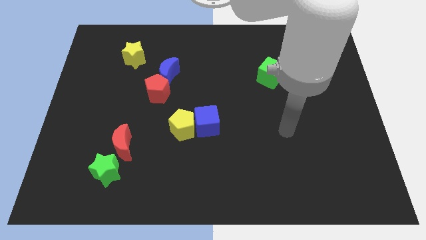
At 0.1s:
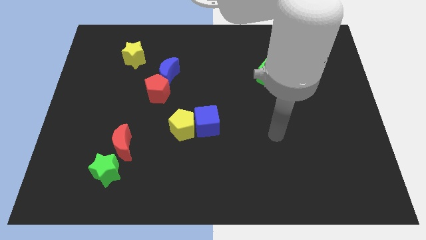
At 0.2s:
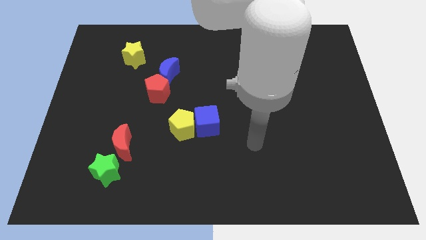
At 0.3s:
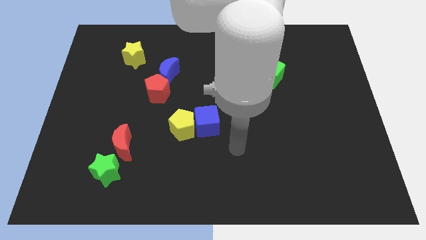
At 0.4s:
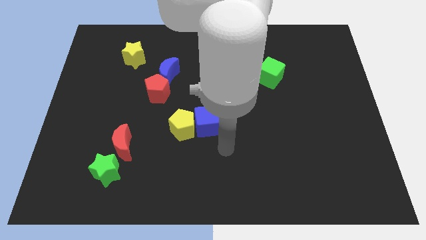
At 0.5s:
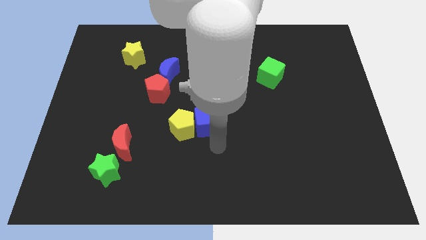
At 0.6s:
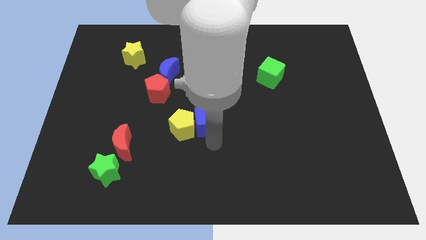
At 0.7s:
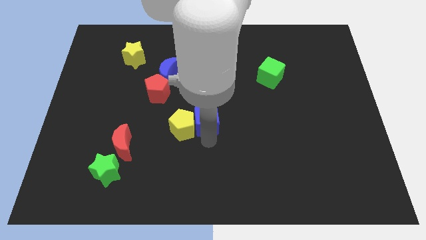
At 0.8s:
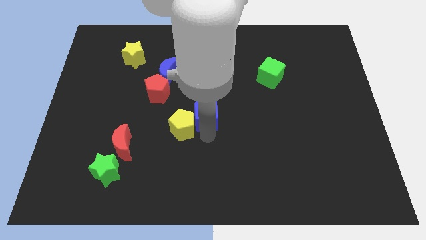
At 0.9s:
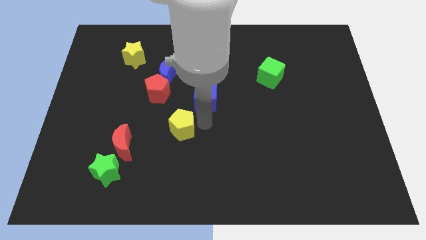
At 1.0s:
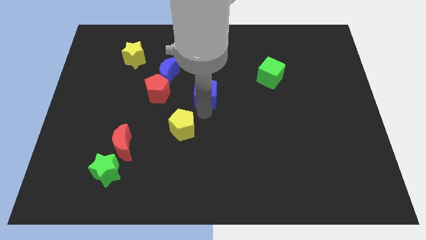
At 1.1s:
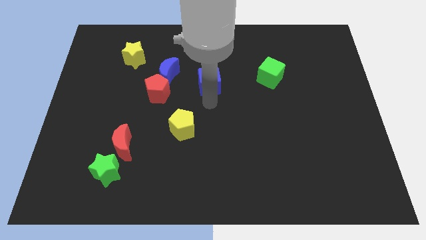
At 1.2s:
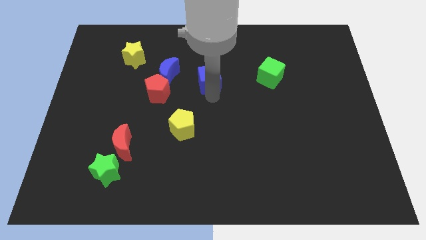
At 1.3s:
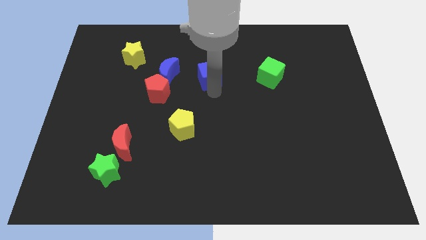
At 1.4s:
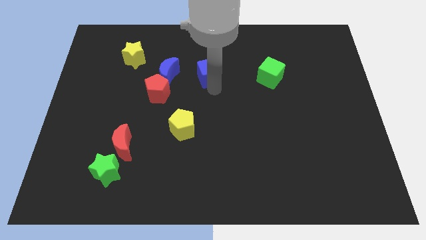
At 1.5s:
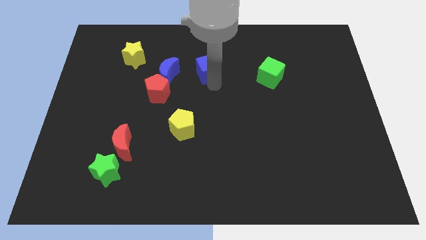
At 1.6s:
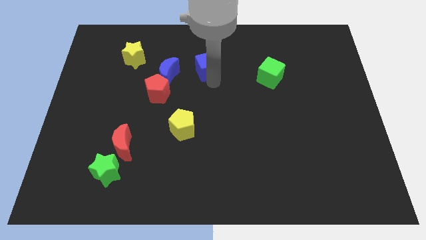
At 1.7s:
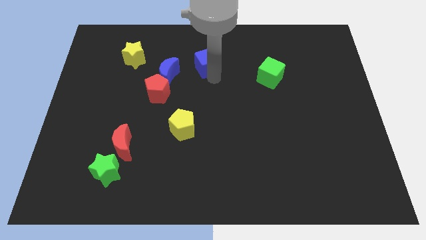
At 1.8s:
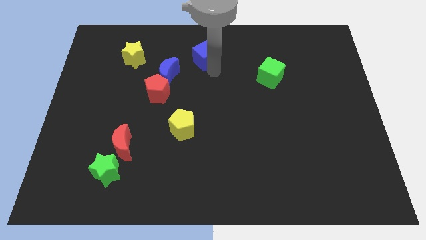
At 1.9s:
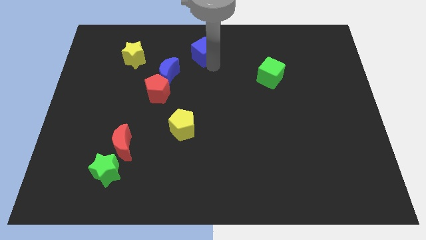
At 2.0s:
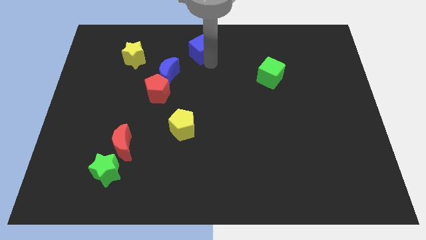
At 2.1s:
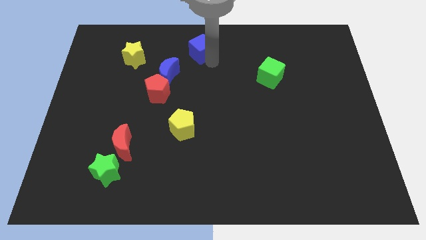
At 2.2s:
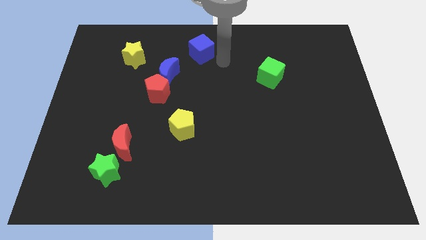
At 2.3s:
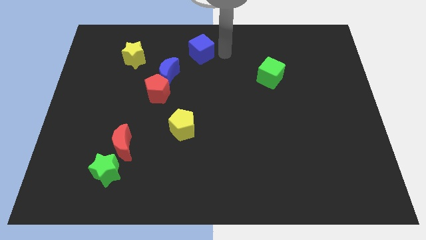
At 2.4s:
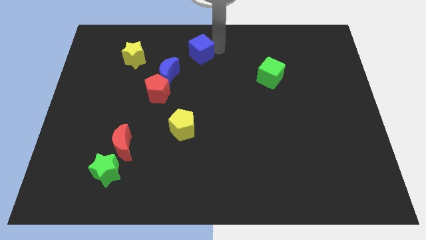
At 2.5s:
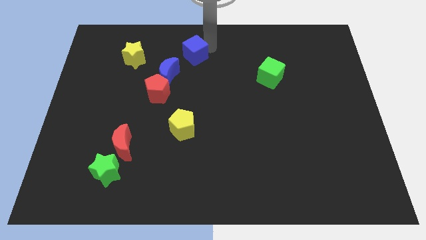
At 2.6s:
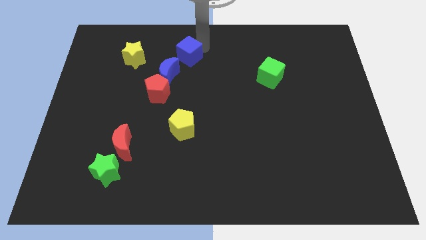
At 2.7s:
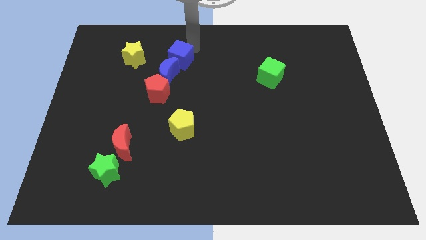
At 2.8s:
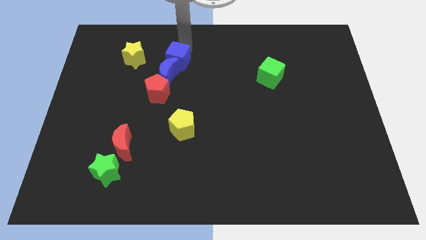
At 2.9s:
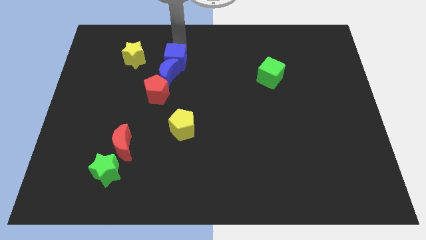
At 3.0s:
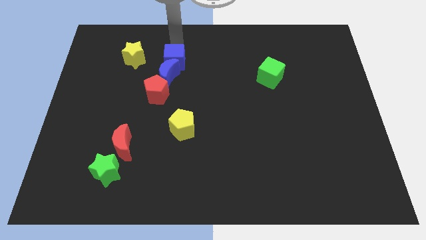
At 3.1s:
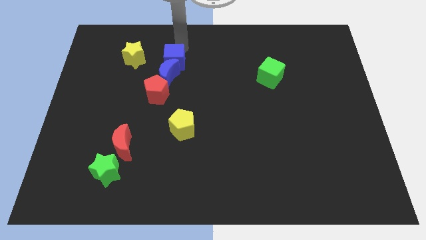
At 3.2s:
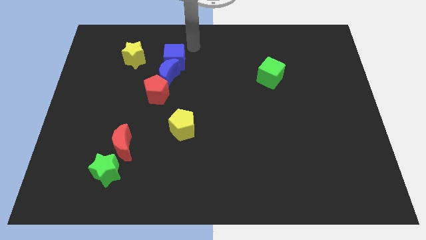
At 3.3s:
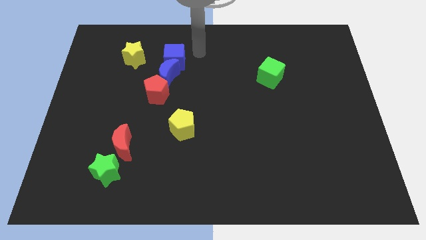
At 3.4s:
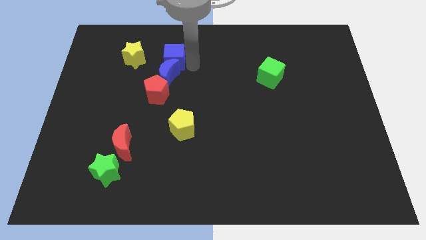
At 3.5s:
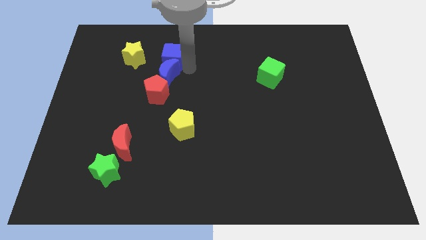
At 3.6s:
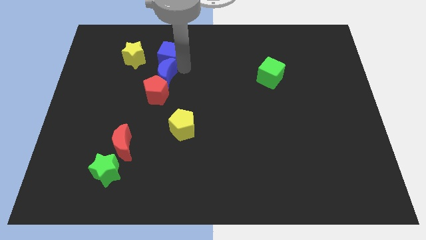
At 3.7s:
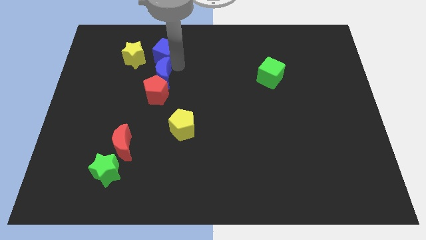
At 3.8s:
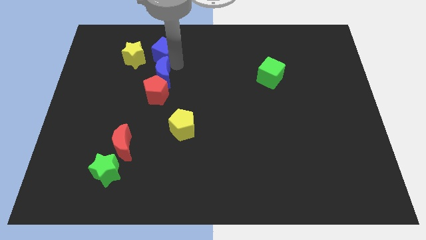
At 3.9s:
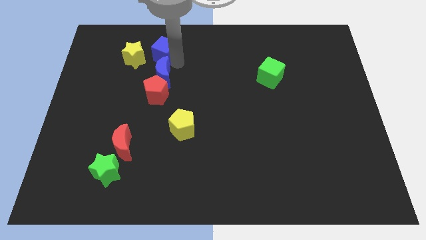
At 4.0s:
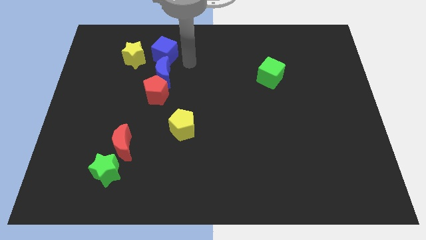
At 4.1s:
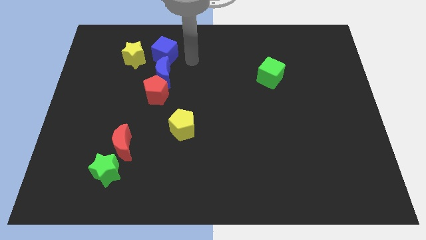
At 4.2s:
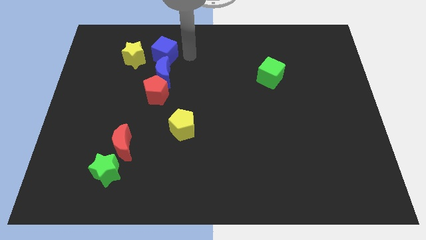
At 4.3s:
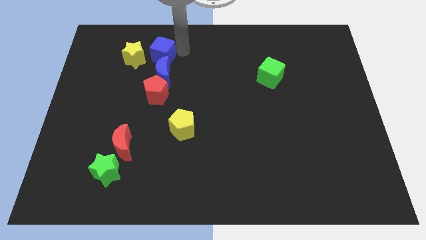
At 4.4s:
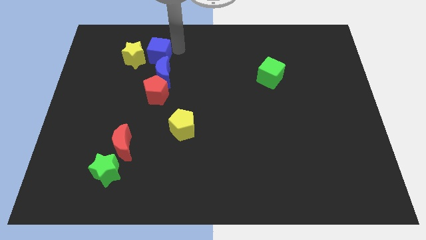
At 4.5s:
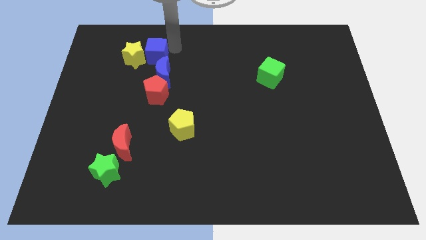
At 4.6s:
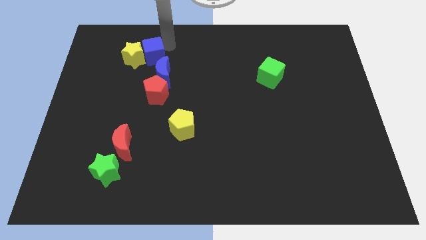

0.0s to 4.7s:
slide the blue cube close to the yellow star

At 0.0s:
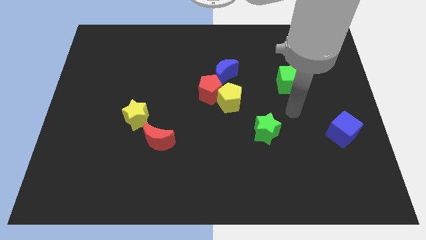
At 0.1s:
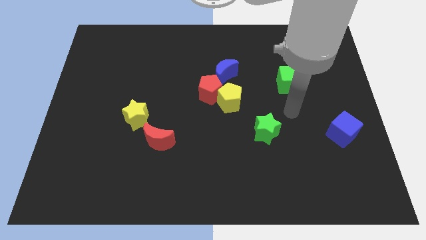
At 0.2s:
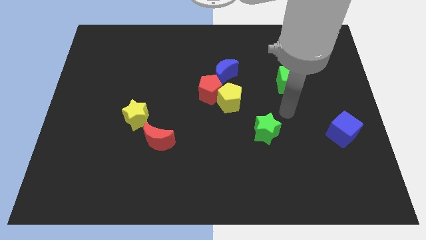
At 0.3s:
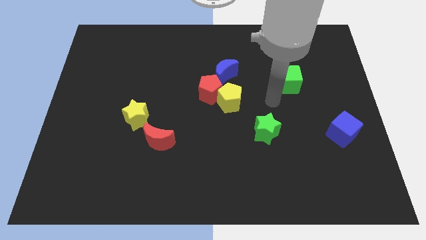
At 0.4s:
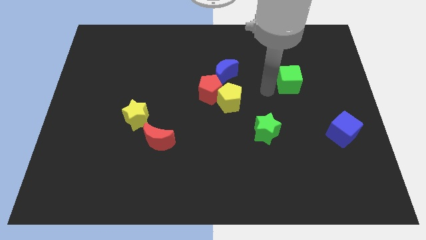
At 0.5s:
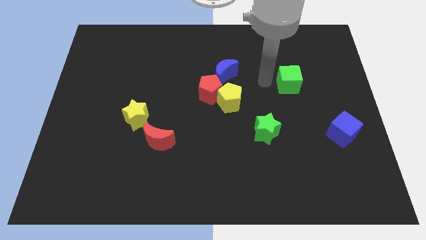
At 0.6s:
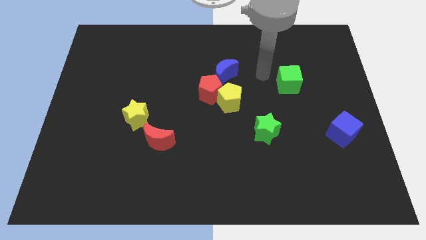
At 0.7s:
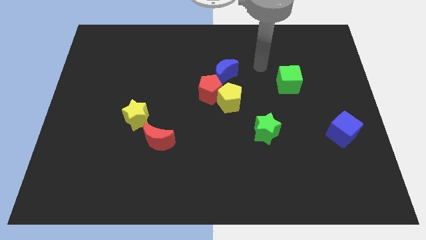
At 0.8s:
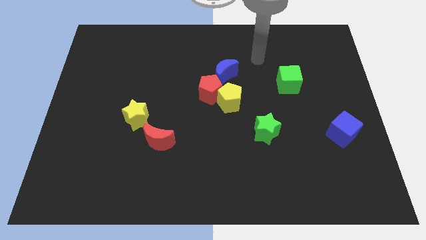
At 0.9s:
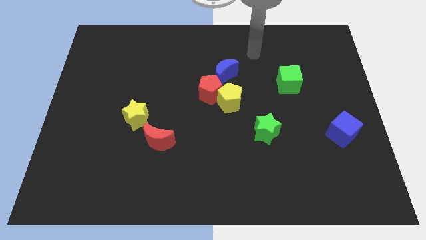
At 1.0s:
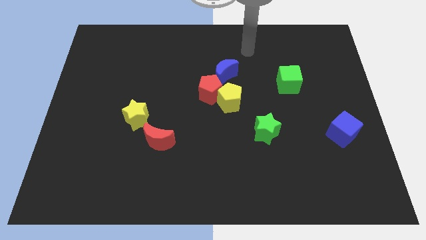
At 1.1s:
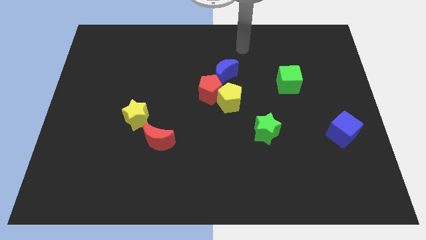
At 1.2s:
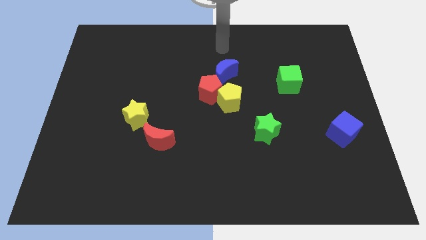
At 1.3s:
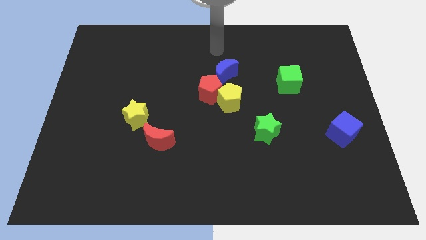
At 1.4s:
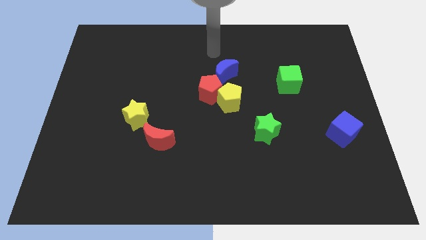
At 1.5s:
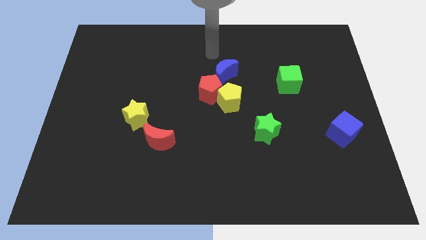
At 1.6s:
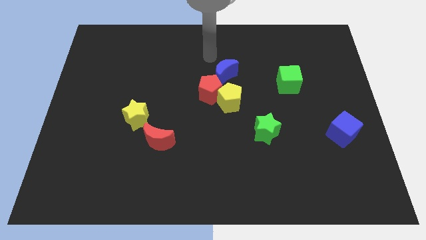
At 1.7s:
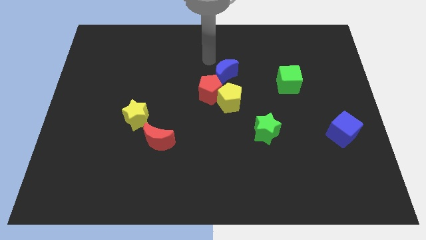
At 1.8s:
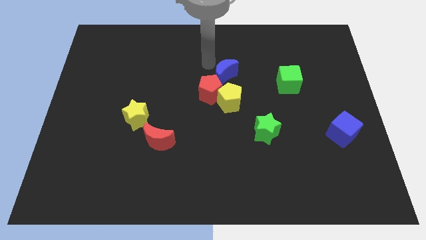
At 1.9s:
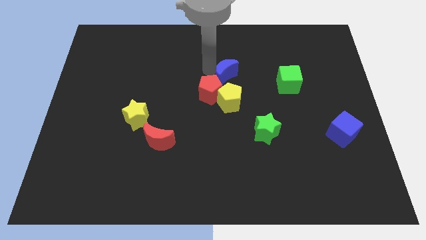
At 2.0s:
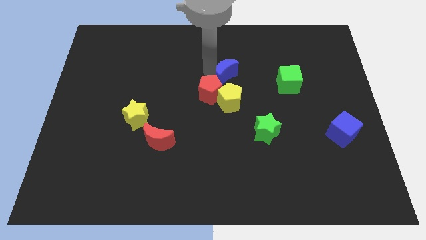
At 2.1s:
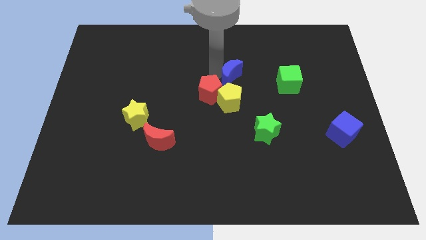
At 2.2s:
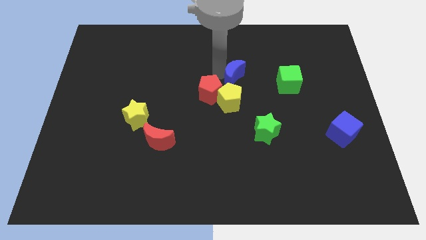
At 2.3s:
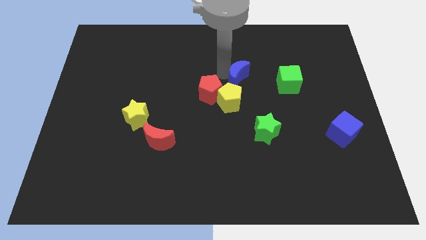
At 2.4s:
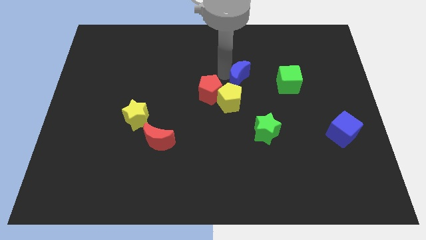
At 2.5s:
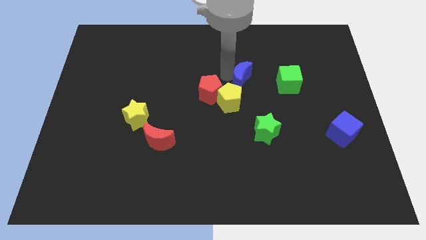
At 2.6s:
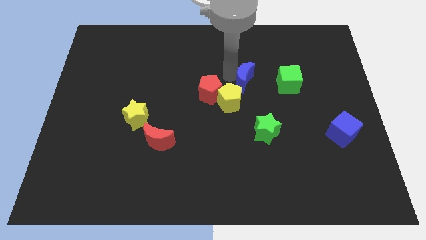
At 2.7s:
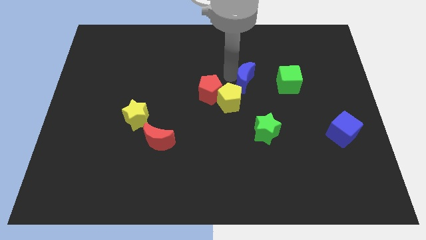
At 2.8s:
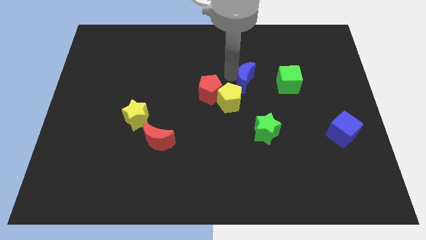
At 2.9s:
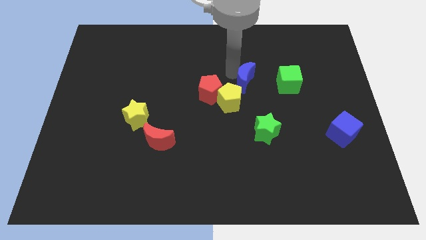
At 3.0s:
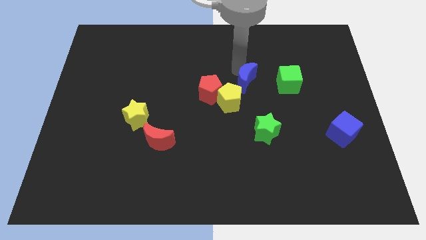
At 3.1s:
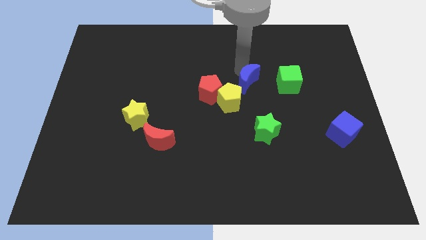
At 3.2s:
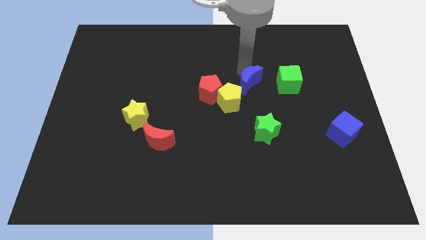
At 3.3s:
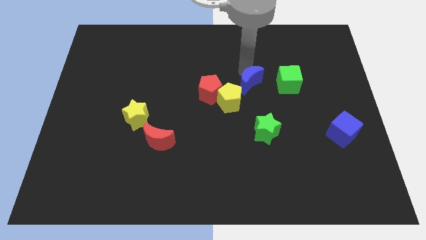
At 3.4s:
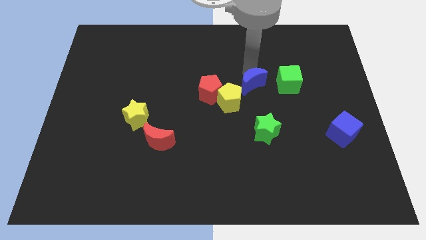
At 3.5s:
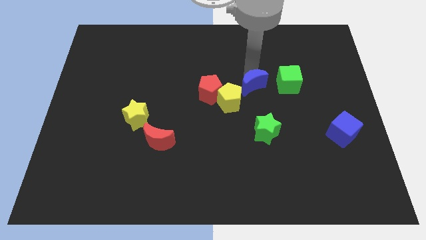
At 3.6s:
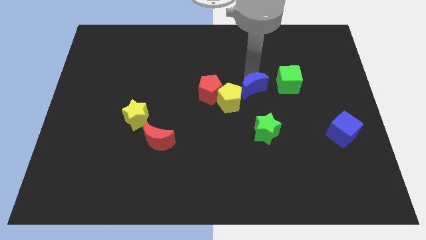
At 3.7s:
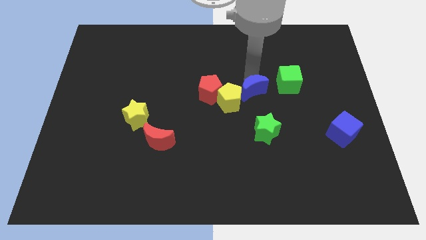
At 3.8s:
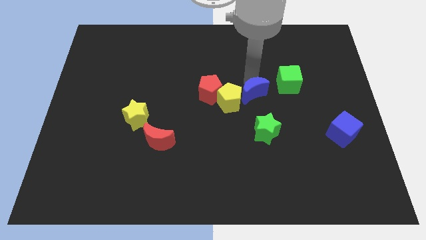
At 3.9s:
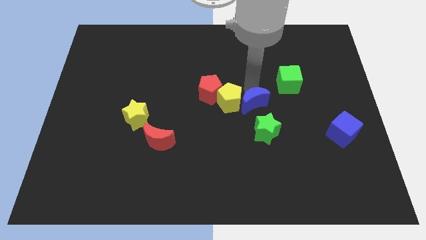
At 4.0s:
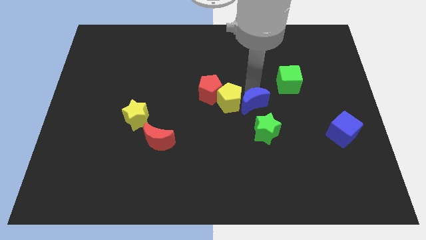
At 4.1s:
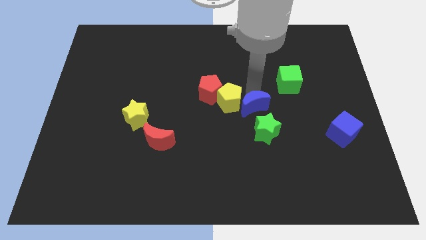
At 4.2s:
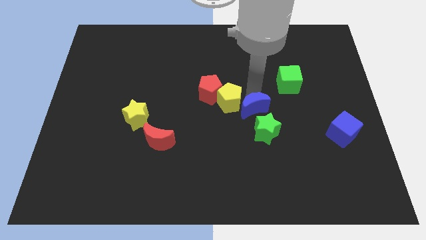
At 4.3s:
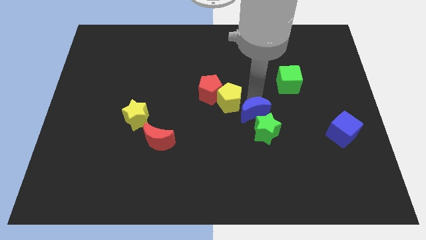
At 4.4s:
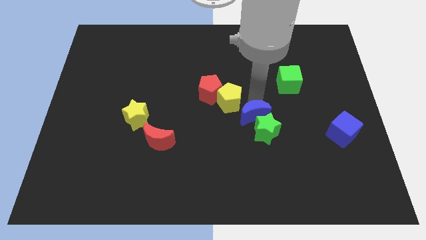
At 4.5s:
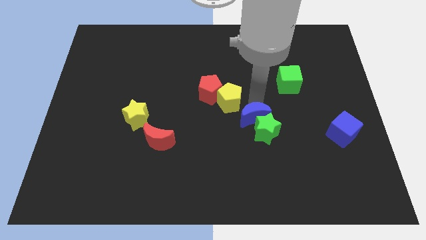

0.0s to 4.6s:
put the blue moon close to the green star
